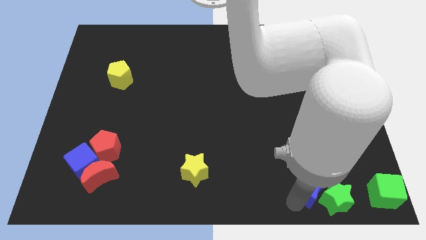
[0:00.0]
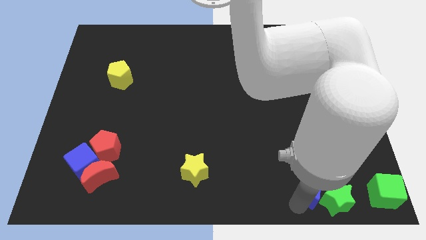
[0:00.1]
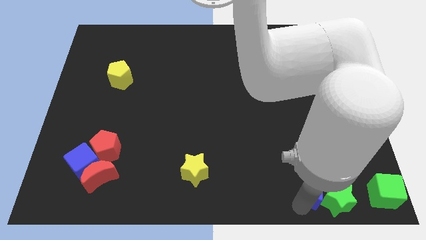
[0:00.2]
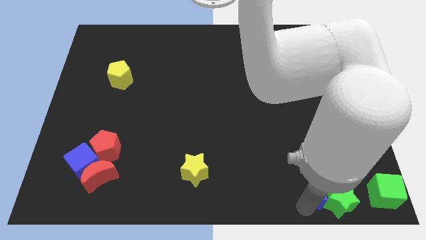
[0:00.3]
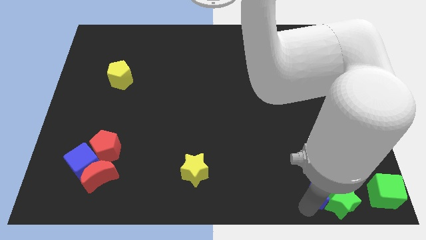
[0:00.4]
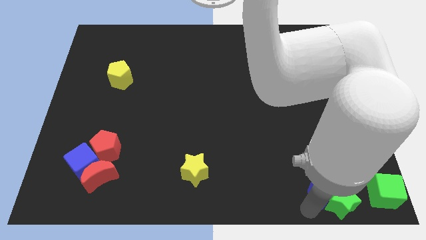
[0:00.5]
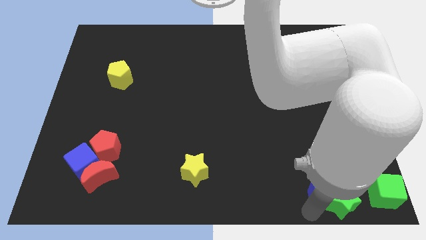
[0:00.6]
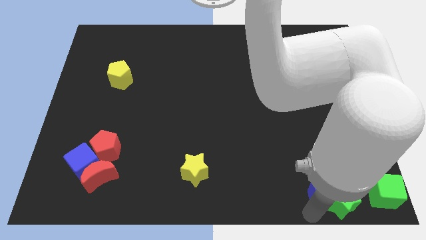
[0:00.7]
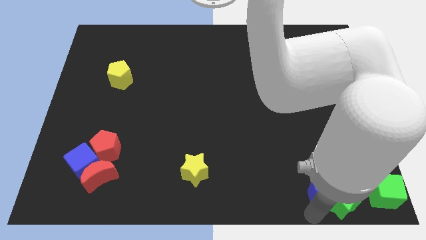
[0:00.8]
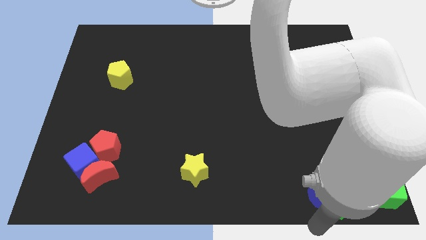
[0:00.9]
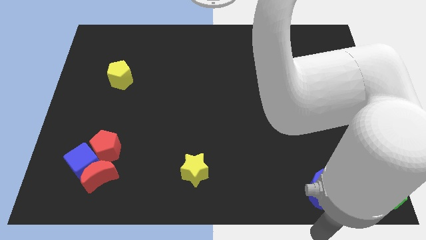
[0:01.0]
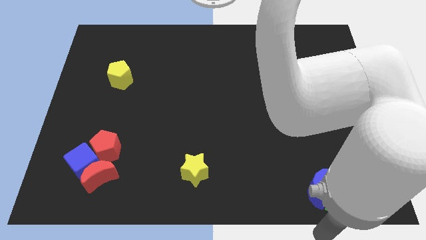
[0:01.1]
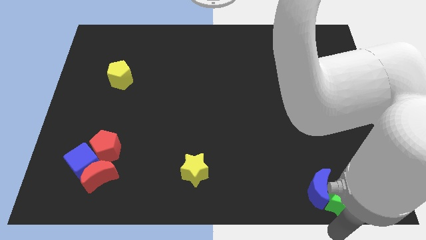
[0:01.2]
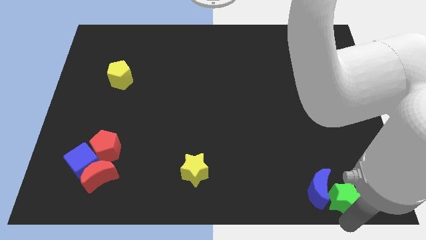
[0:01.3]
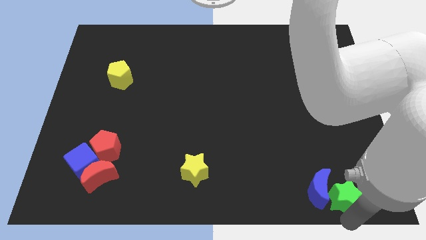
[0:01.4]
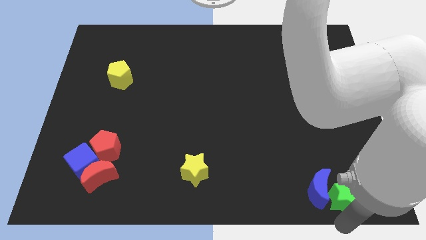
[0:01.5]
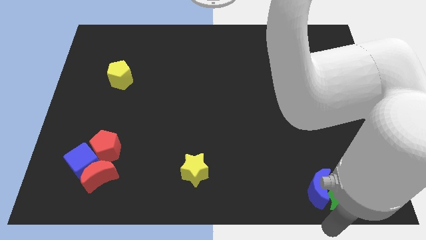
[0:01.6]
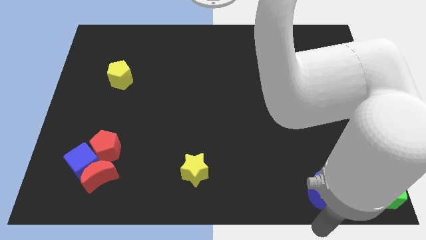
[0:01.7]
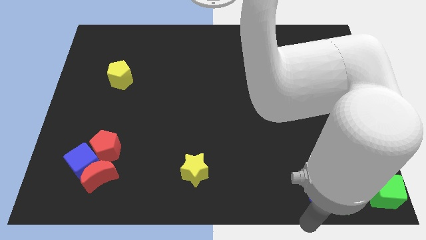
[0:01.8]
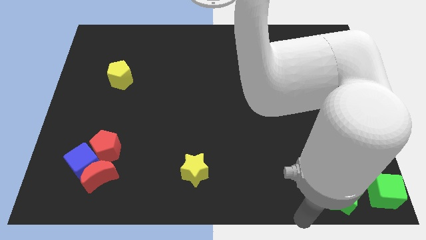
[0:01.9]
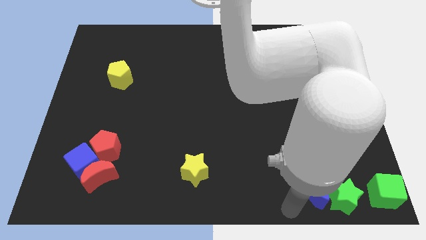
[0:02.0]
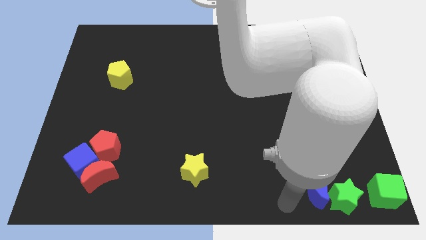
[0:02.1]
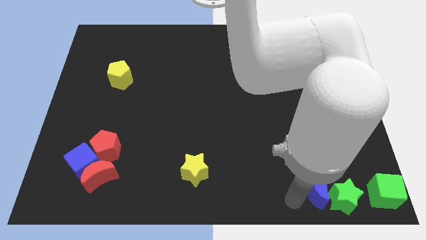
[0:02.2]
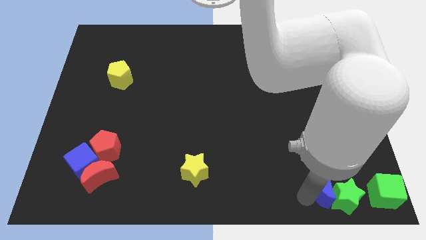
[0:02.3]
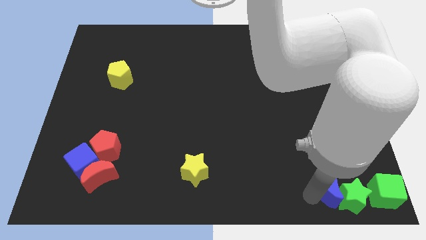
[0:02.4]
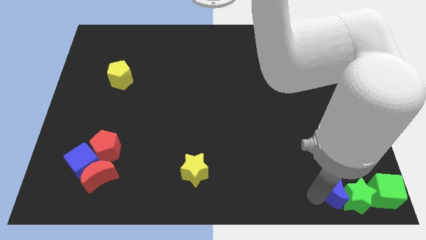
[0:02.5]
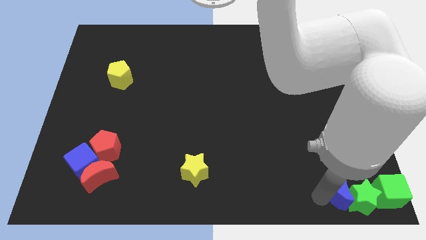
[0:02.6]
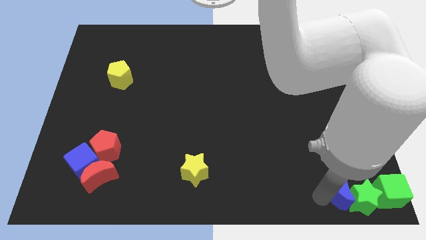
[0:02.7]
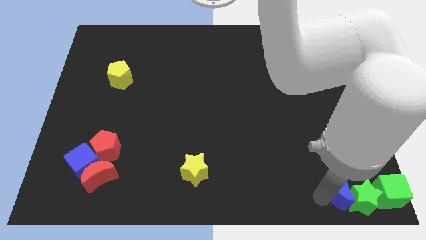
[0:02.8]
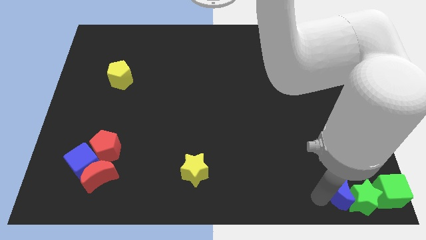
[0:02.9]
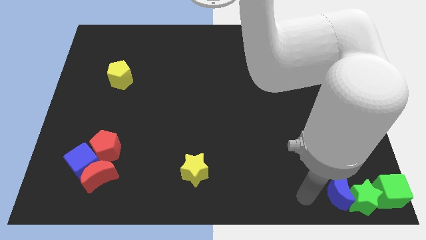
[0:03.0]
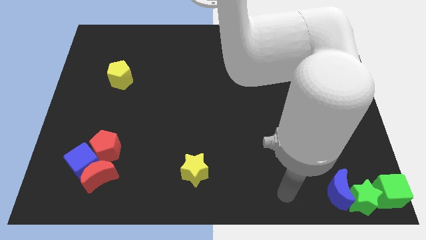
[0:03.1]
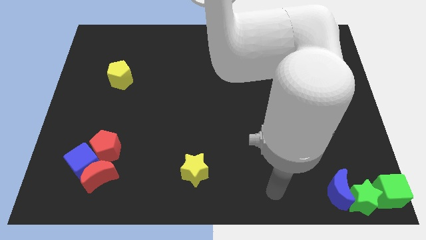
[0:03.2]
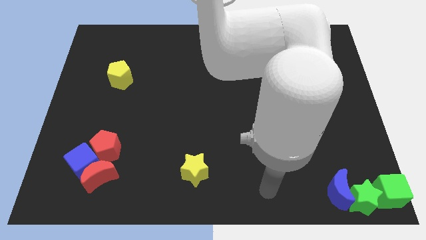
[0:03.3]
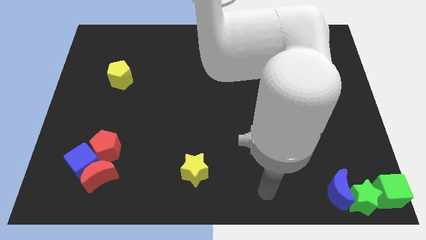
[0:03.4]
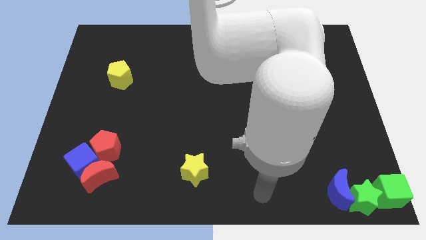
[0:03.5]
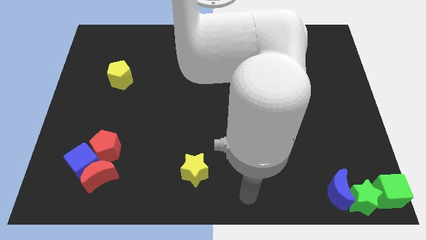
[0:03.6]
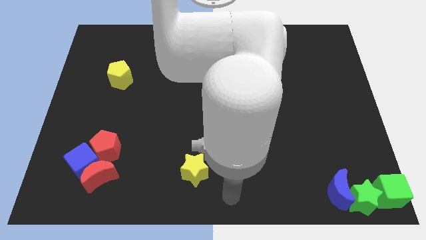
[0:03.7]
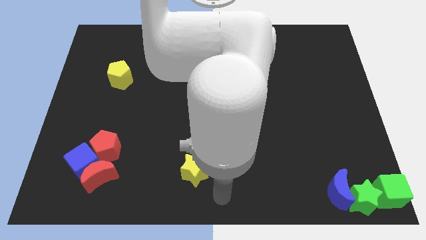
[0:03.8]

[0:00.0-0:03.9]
push the green star with the blue crescent left to the green cube

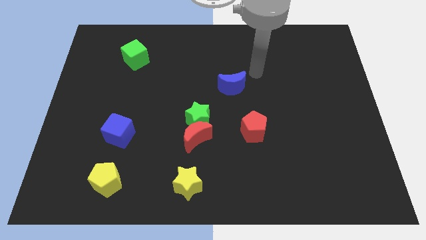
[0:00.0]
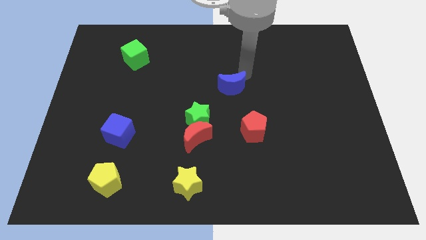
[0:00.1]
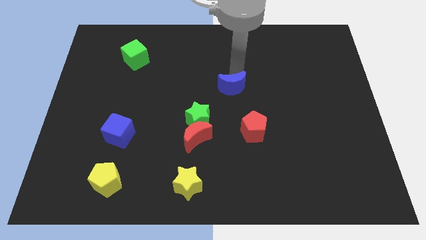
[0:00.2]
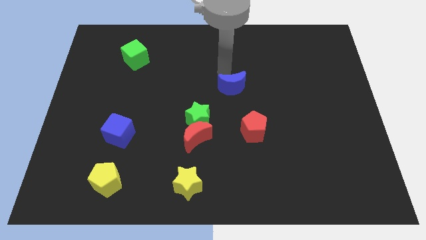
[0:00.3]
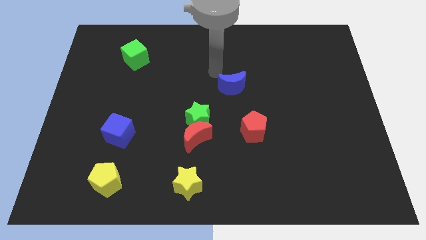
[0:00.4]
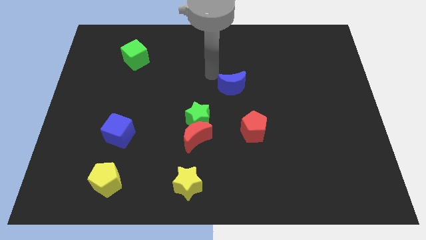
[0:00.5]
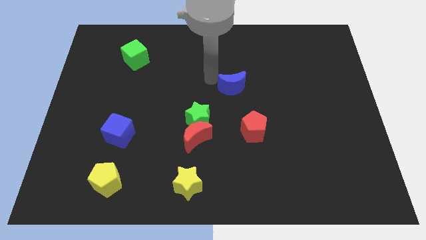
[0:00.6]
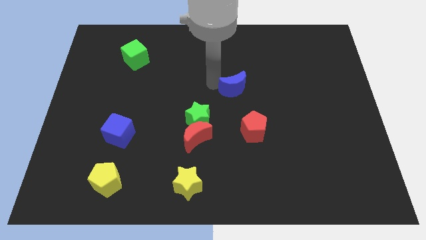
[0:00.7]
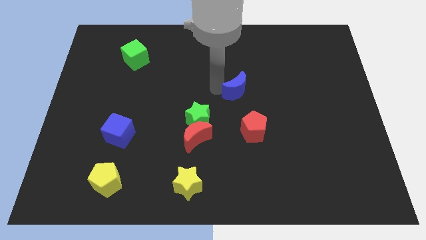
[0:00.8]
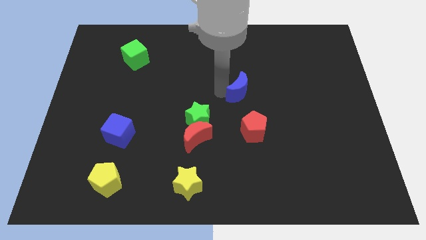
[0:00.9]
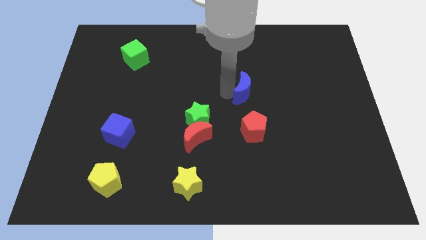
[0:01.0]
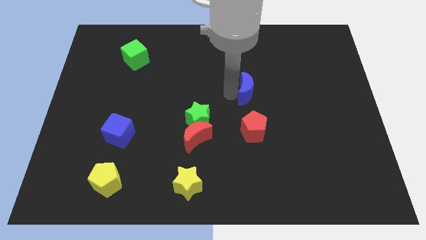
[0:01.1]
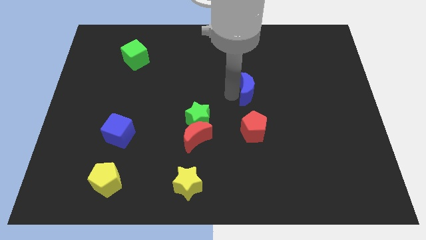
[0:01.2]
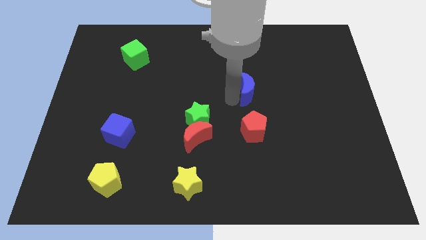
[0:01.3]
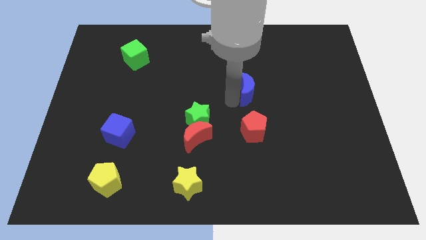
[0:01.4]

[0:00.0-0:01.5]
slide the blue moon above the red pentagon

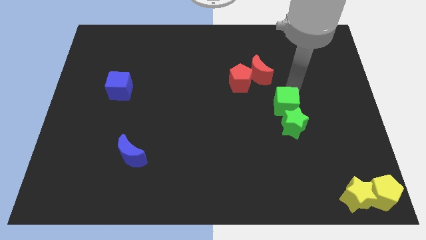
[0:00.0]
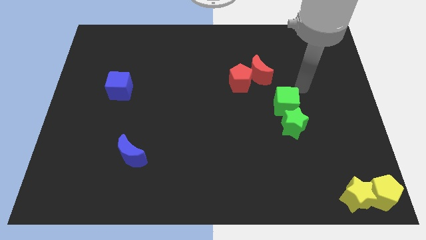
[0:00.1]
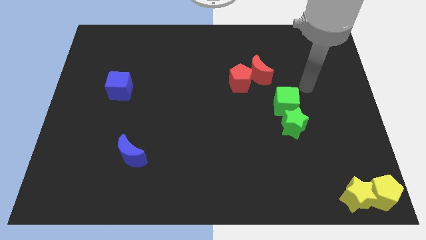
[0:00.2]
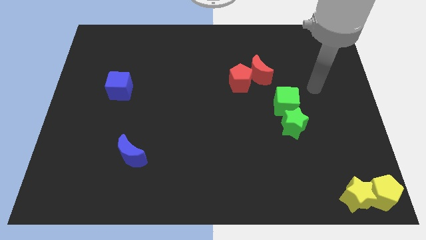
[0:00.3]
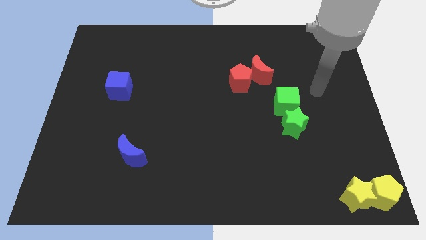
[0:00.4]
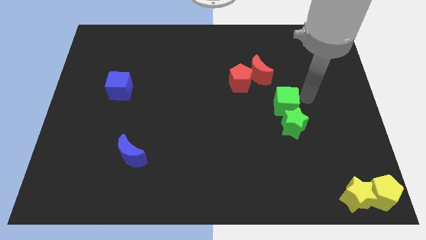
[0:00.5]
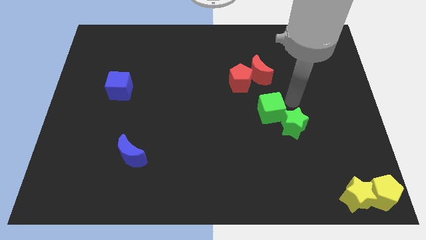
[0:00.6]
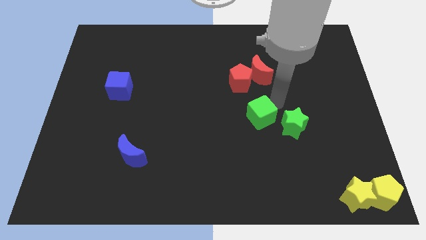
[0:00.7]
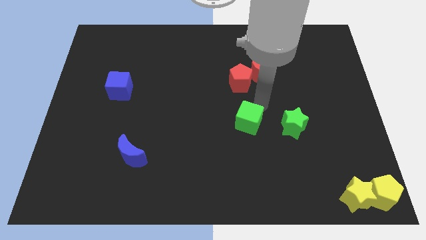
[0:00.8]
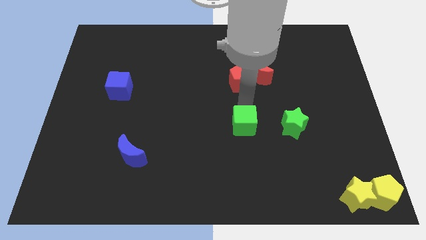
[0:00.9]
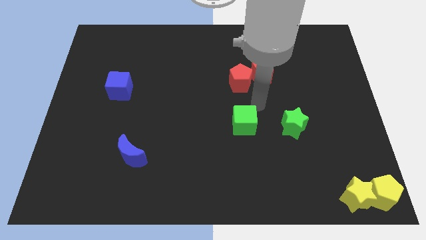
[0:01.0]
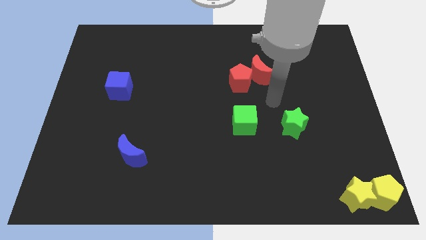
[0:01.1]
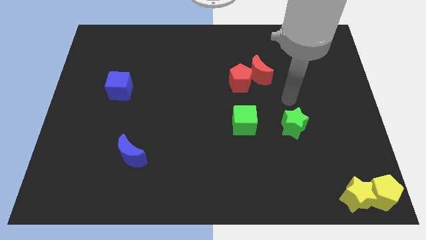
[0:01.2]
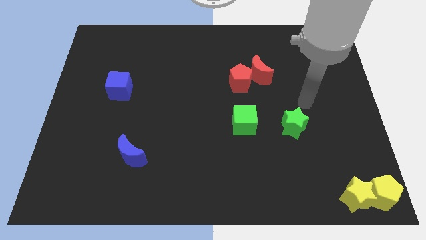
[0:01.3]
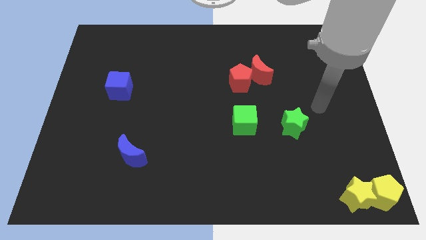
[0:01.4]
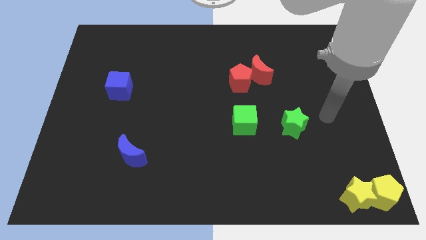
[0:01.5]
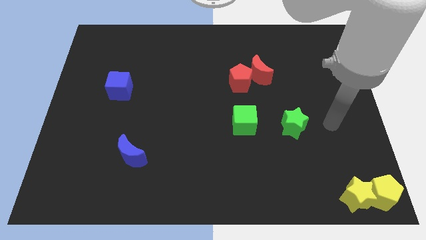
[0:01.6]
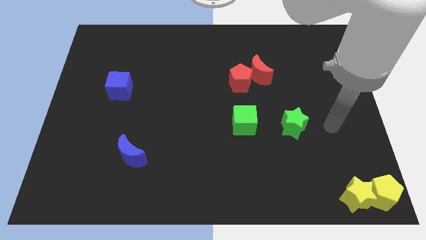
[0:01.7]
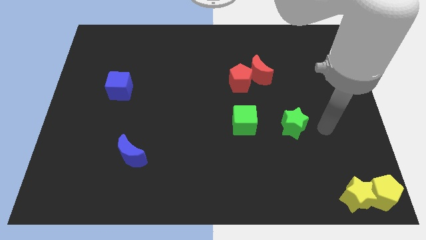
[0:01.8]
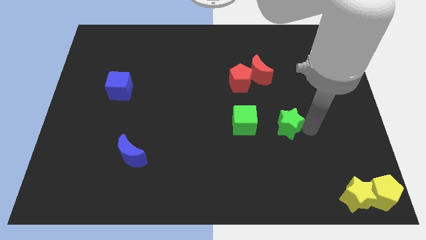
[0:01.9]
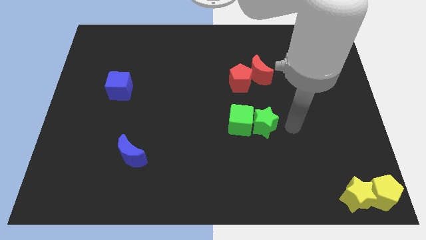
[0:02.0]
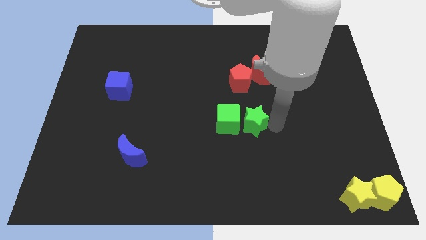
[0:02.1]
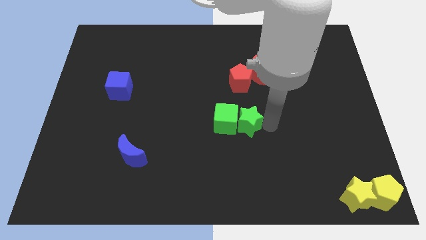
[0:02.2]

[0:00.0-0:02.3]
push the green star left to the green cube

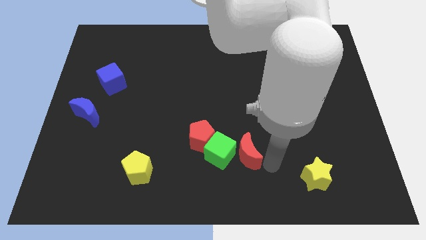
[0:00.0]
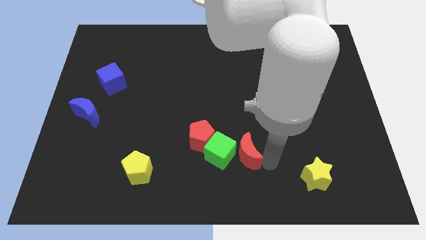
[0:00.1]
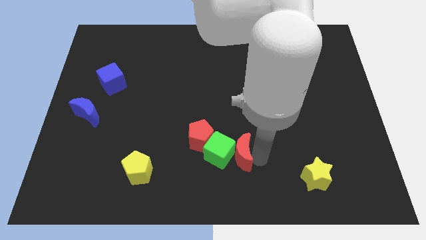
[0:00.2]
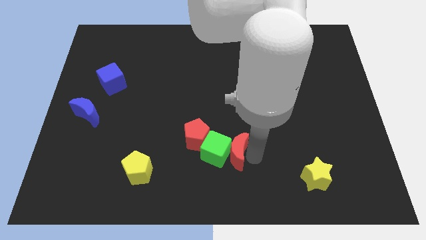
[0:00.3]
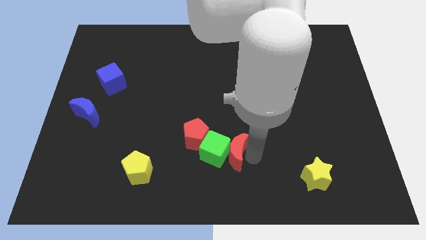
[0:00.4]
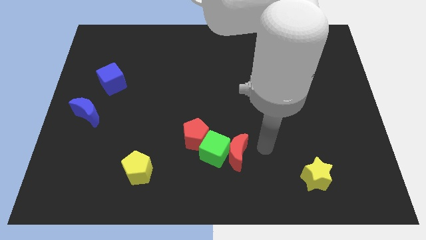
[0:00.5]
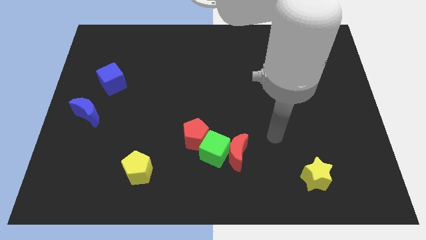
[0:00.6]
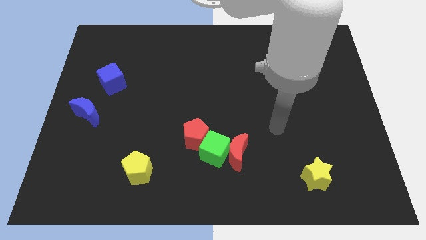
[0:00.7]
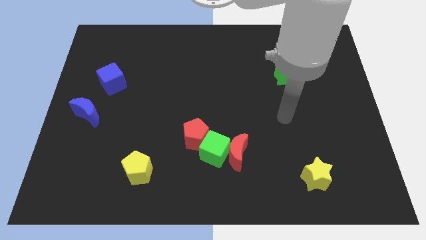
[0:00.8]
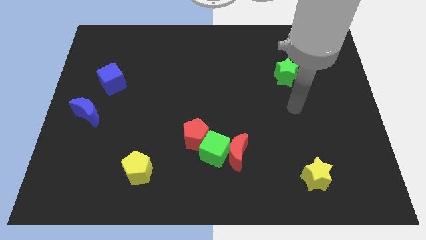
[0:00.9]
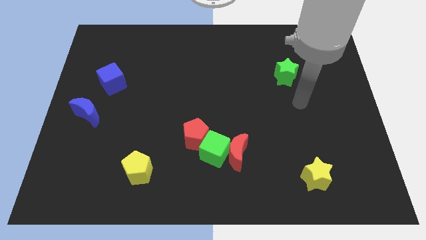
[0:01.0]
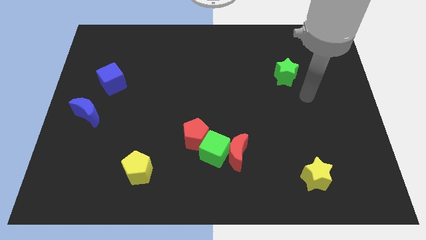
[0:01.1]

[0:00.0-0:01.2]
move arm towards the green star
